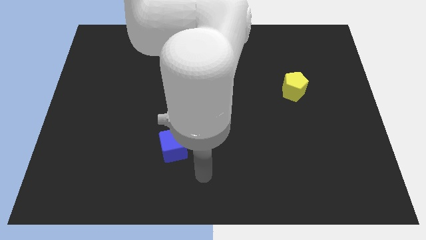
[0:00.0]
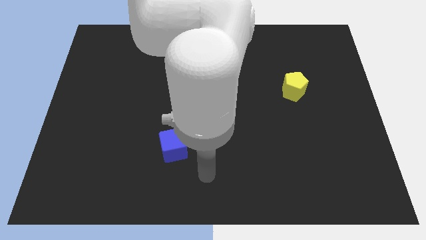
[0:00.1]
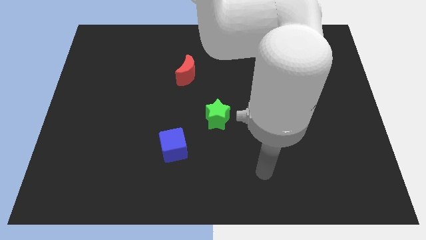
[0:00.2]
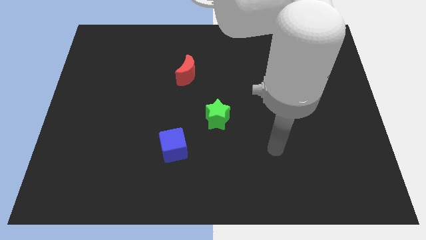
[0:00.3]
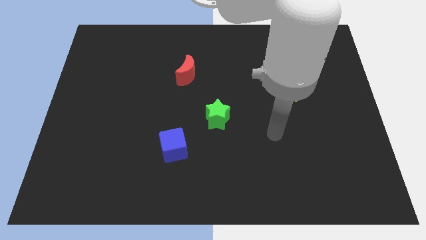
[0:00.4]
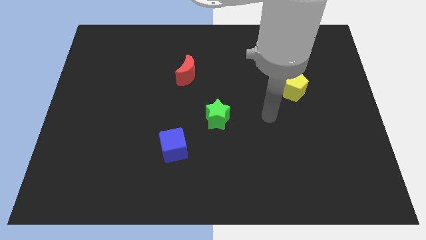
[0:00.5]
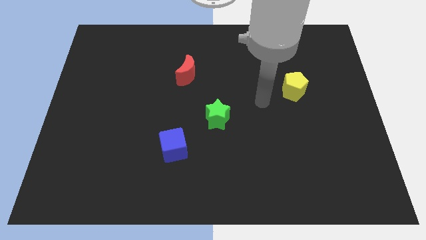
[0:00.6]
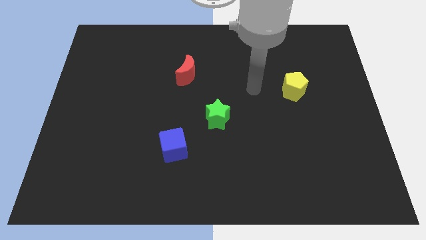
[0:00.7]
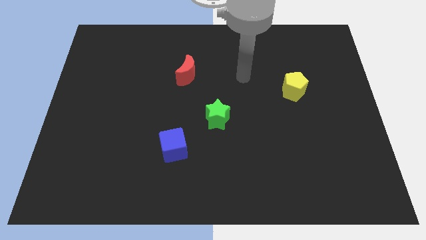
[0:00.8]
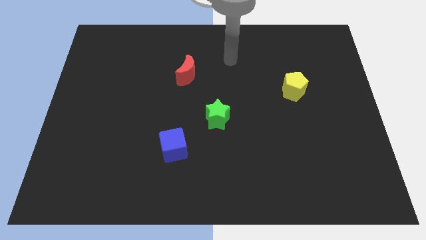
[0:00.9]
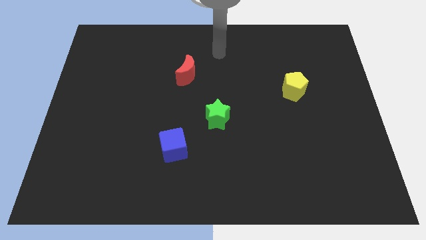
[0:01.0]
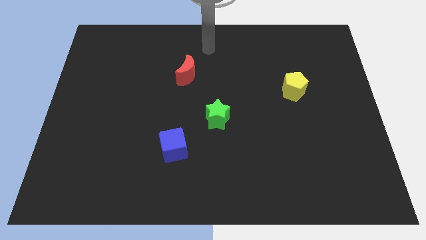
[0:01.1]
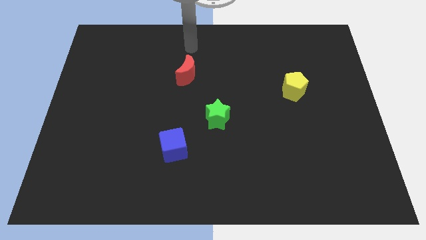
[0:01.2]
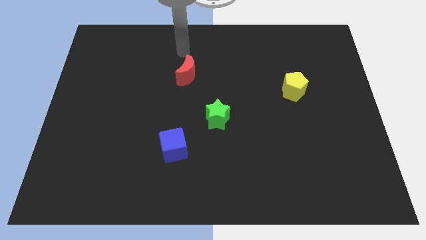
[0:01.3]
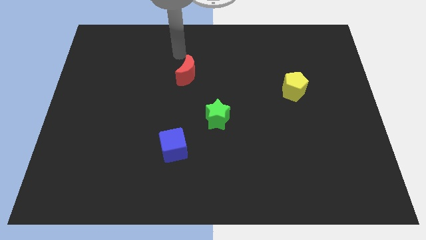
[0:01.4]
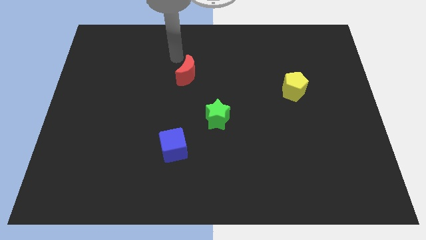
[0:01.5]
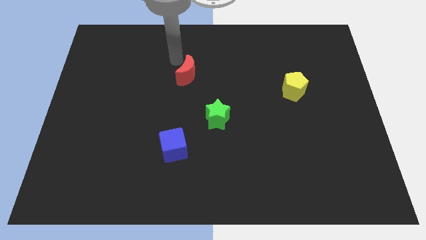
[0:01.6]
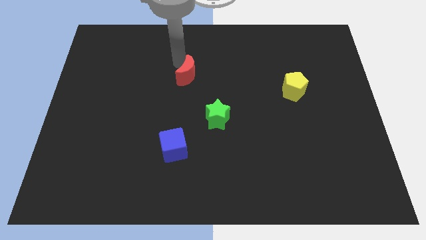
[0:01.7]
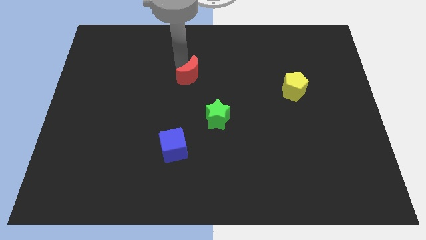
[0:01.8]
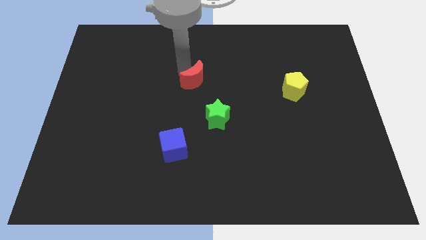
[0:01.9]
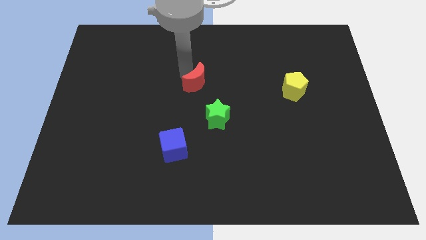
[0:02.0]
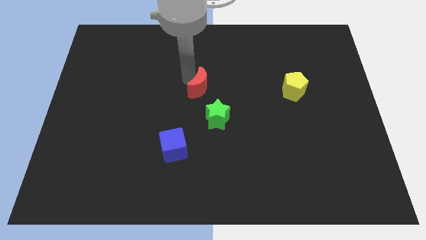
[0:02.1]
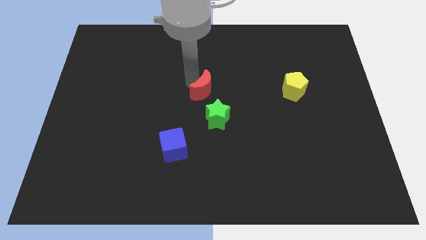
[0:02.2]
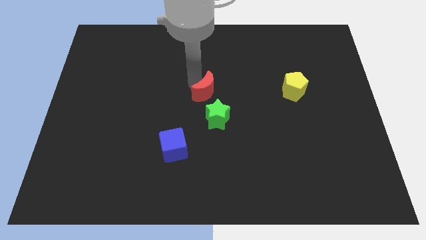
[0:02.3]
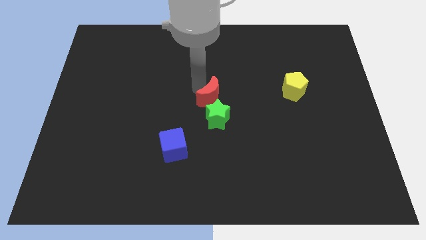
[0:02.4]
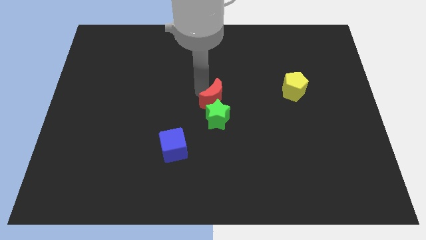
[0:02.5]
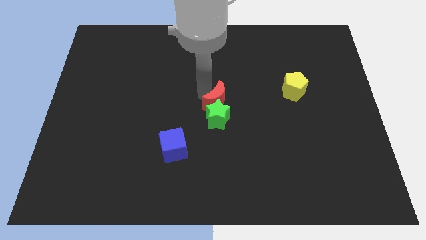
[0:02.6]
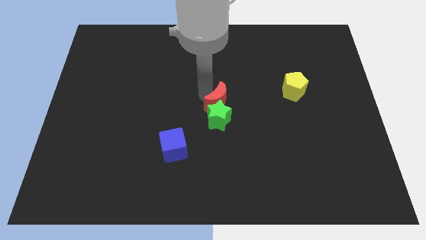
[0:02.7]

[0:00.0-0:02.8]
push the moon next to the green block

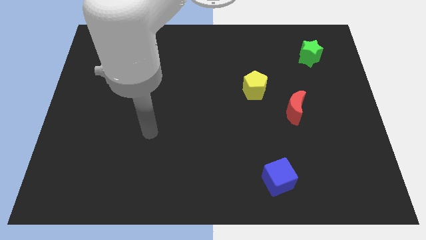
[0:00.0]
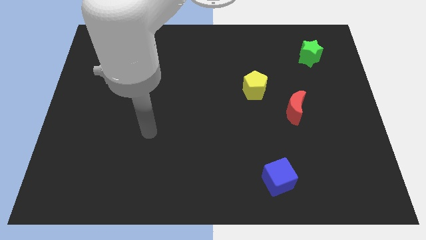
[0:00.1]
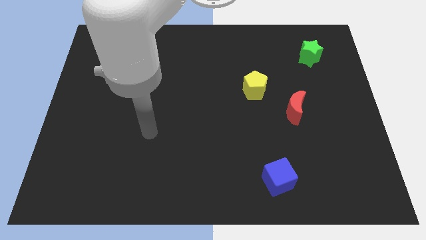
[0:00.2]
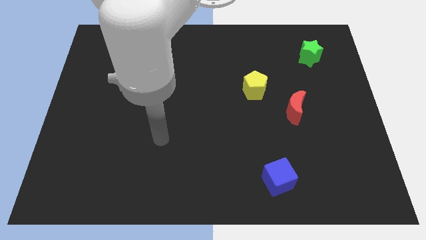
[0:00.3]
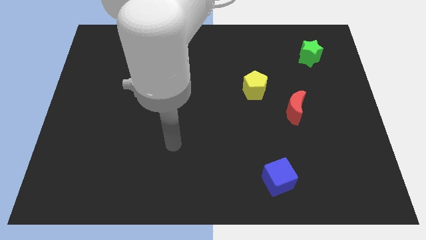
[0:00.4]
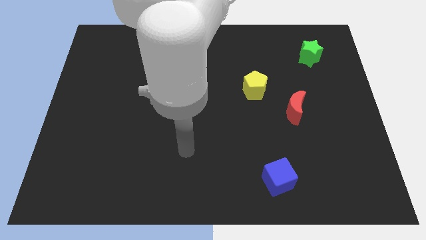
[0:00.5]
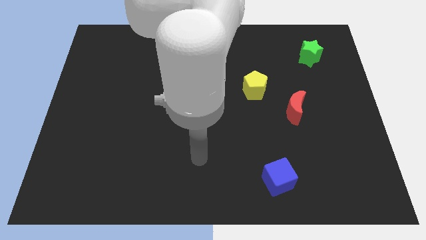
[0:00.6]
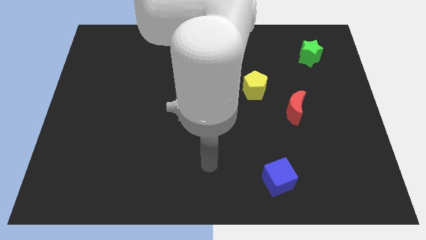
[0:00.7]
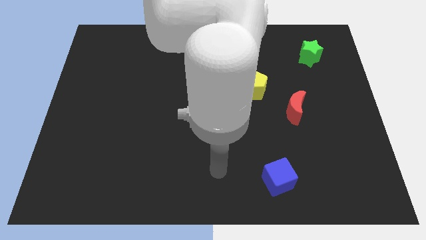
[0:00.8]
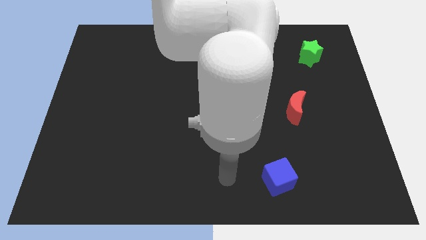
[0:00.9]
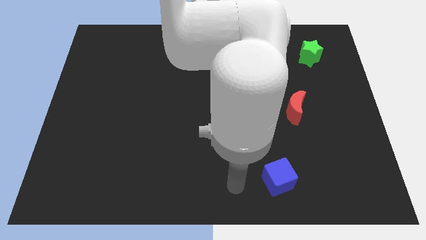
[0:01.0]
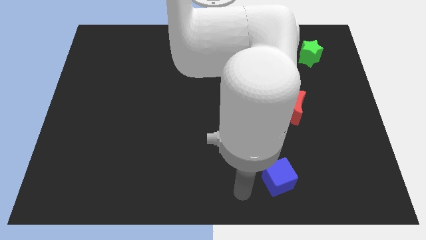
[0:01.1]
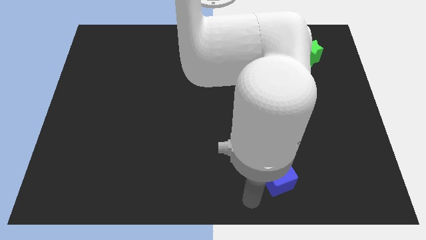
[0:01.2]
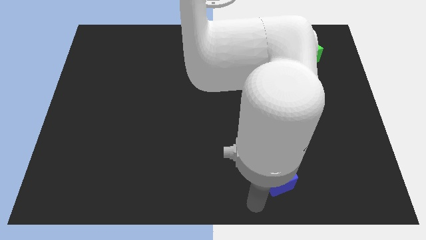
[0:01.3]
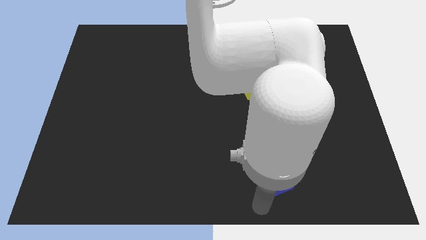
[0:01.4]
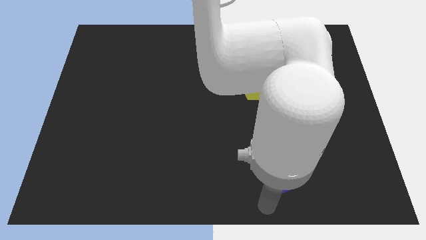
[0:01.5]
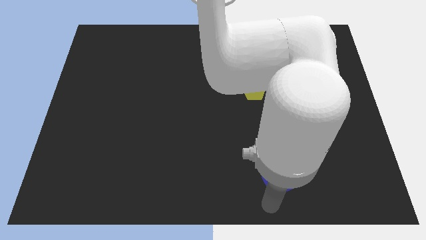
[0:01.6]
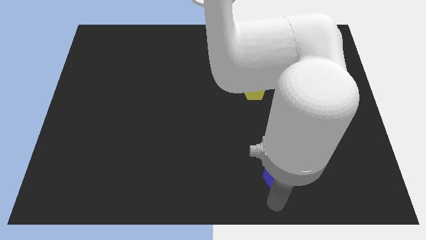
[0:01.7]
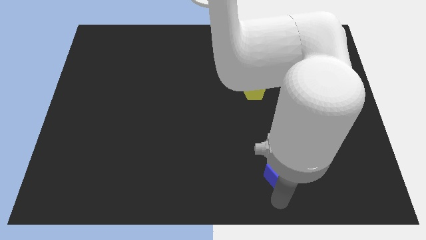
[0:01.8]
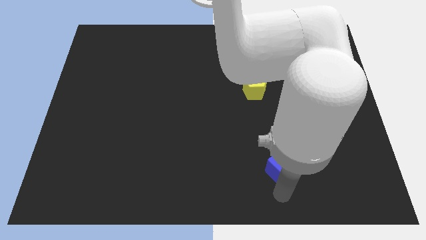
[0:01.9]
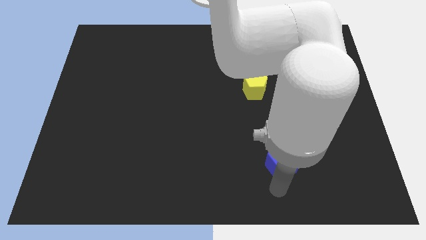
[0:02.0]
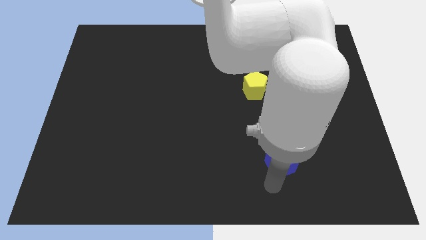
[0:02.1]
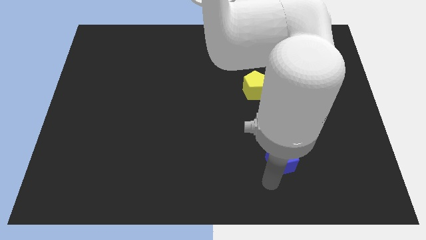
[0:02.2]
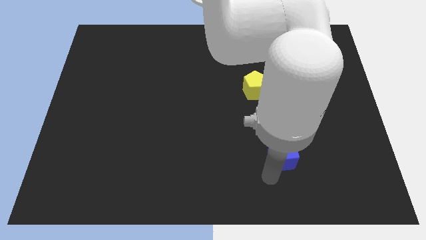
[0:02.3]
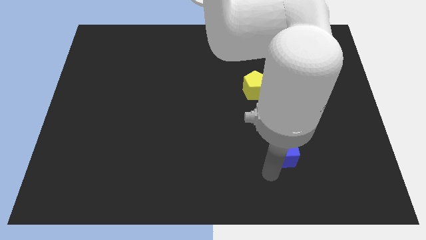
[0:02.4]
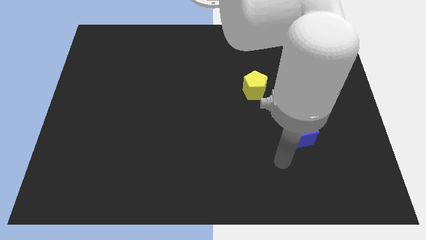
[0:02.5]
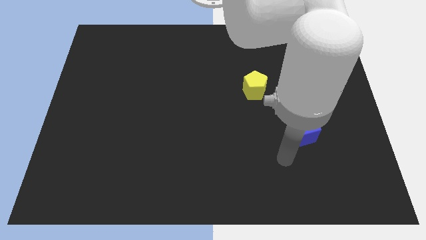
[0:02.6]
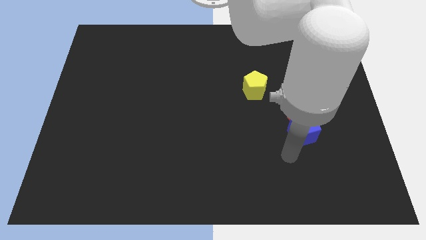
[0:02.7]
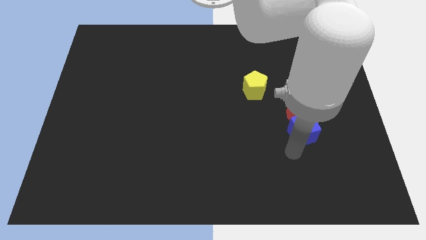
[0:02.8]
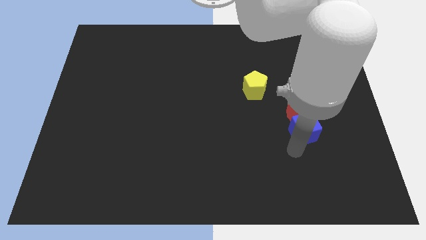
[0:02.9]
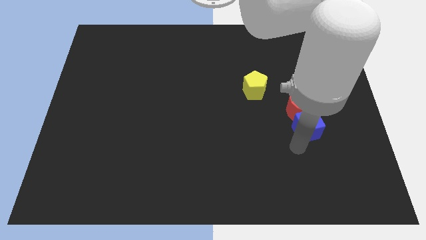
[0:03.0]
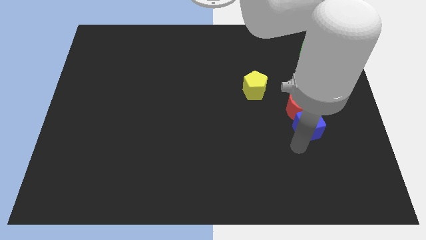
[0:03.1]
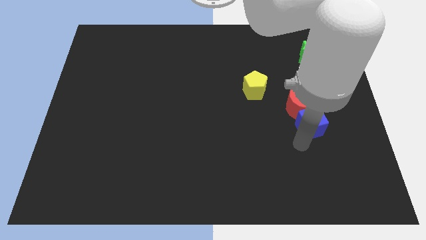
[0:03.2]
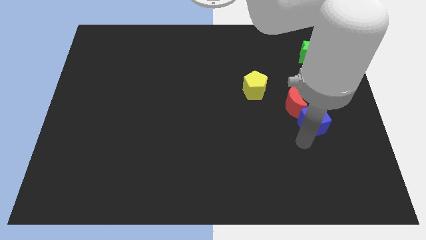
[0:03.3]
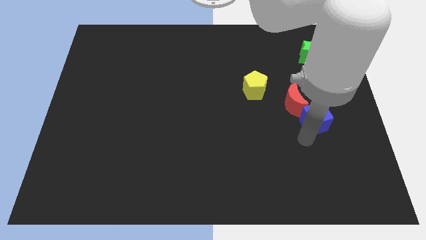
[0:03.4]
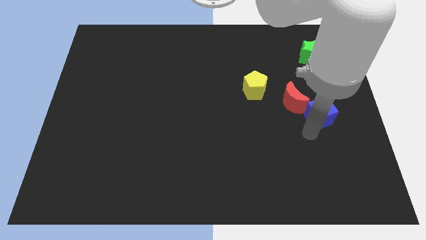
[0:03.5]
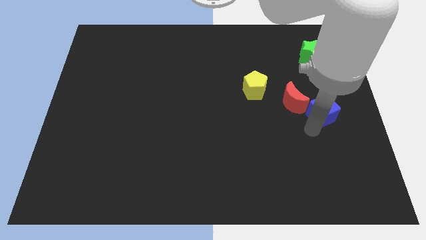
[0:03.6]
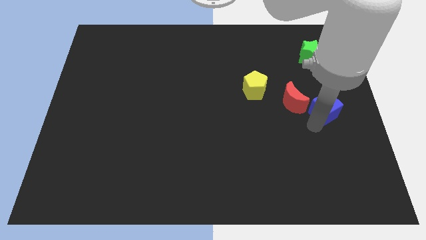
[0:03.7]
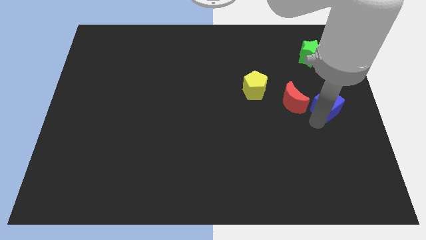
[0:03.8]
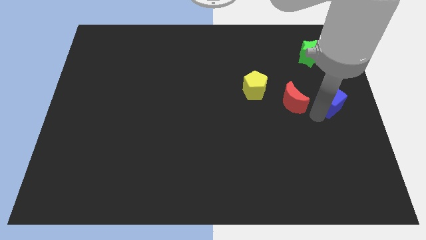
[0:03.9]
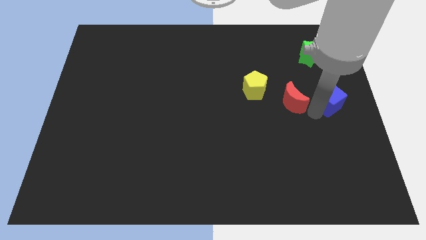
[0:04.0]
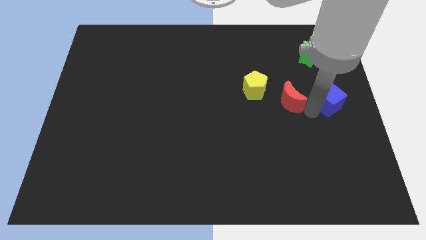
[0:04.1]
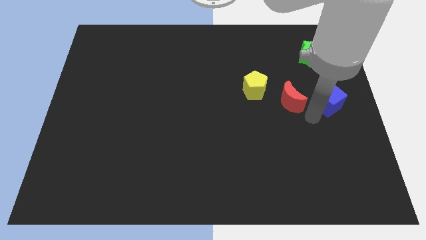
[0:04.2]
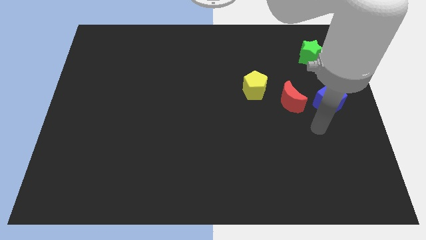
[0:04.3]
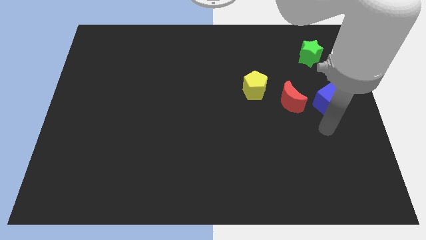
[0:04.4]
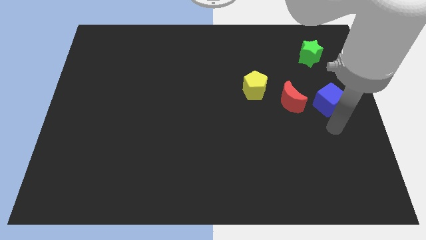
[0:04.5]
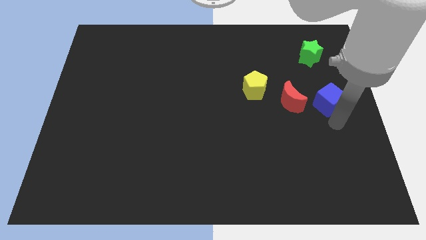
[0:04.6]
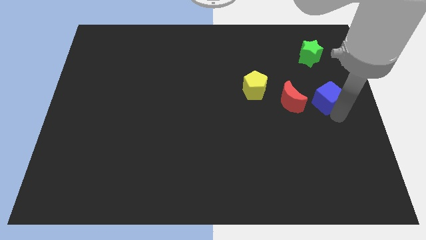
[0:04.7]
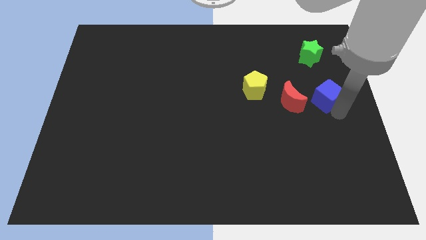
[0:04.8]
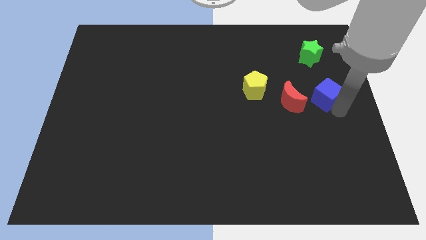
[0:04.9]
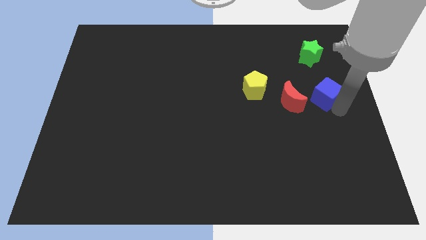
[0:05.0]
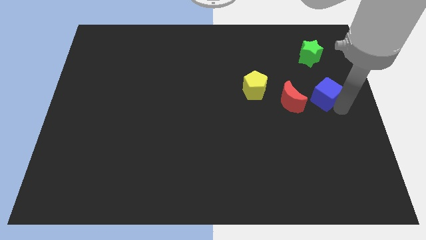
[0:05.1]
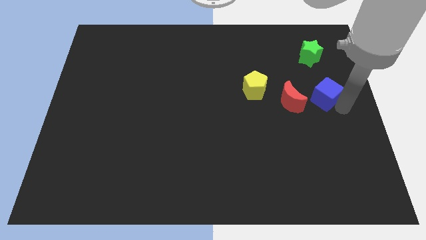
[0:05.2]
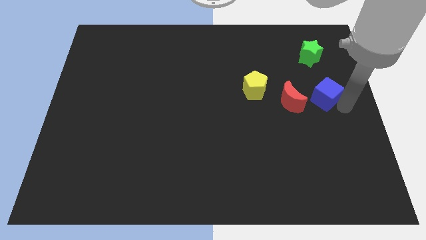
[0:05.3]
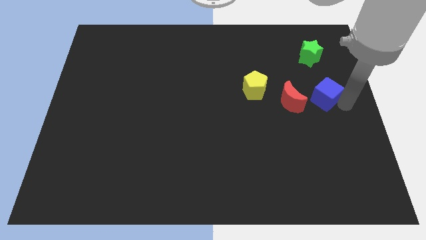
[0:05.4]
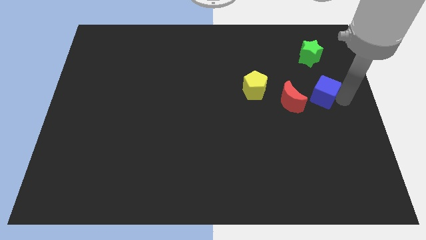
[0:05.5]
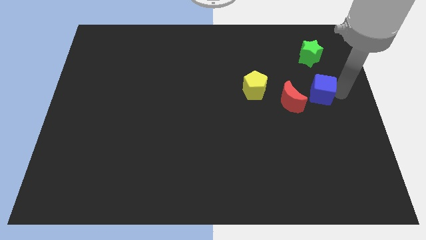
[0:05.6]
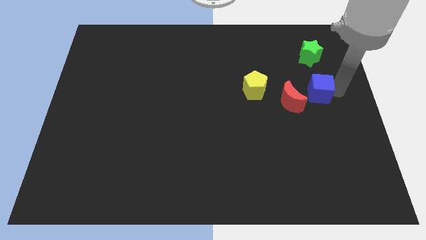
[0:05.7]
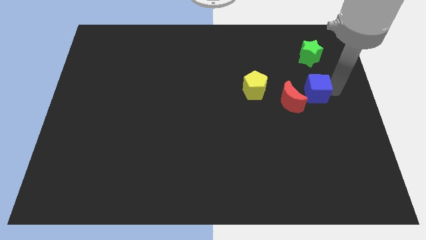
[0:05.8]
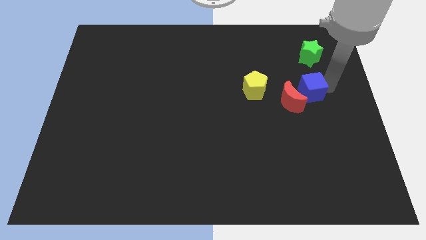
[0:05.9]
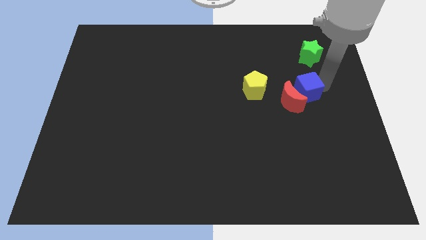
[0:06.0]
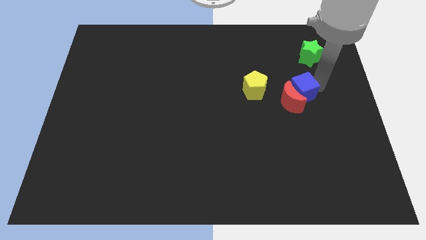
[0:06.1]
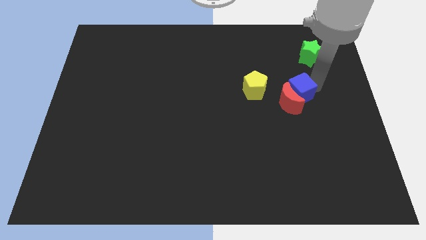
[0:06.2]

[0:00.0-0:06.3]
move the blue block towards the red moon
